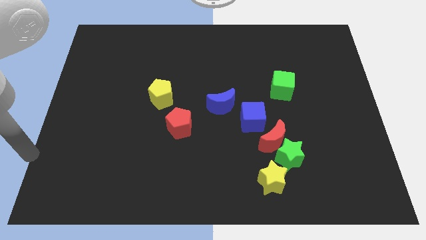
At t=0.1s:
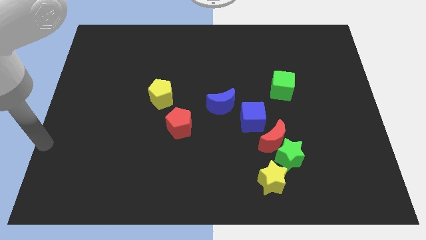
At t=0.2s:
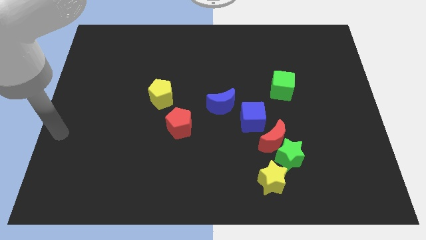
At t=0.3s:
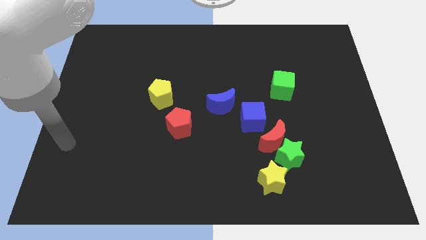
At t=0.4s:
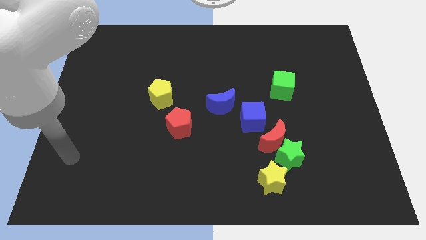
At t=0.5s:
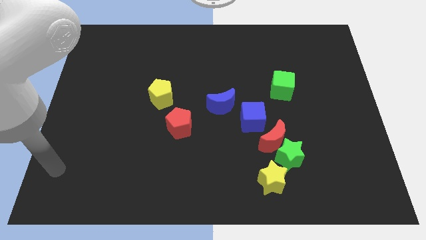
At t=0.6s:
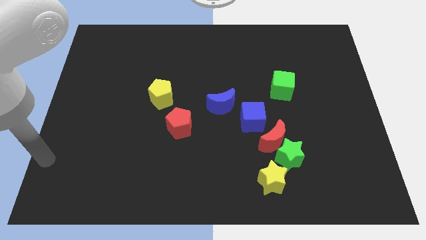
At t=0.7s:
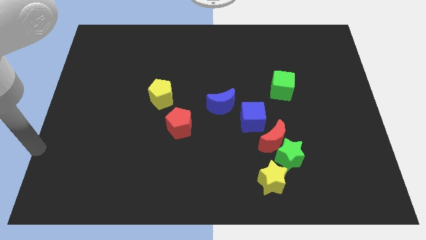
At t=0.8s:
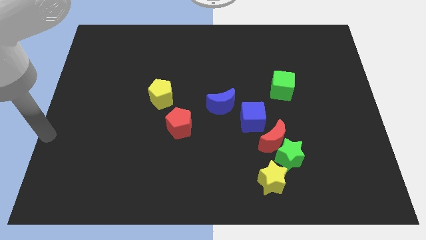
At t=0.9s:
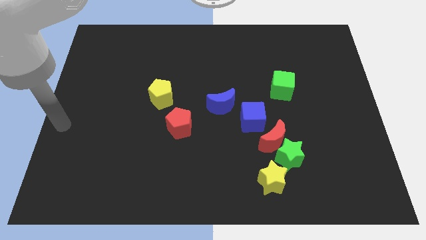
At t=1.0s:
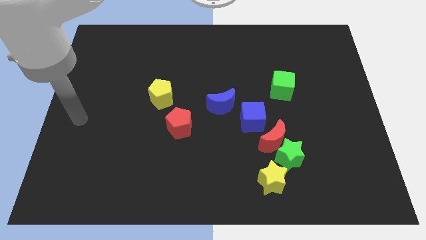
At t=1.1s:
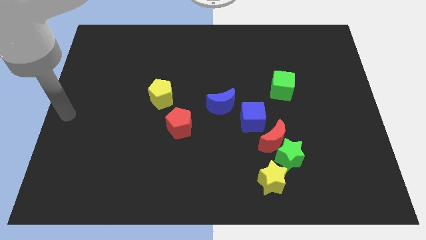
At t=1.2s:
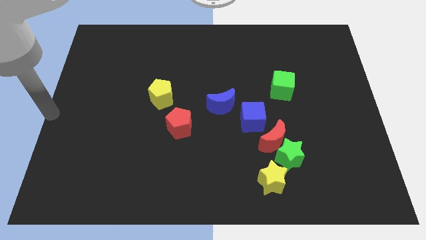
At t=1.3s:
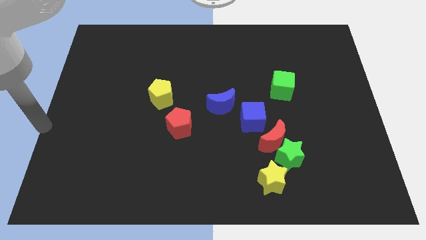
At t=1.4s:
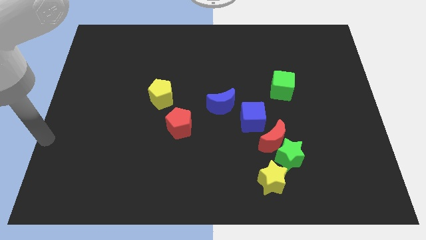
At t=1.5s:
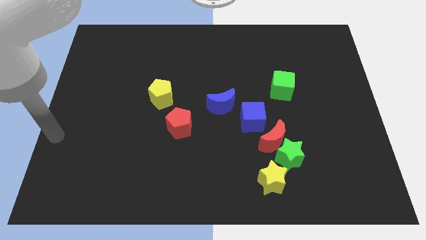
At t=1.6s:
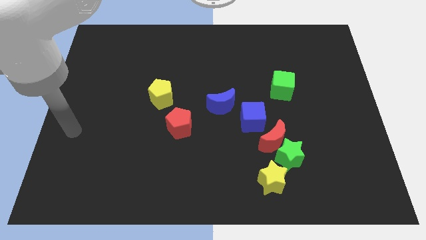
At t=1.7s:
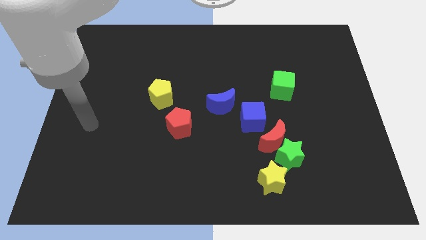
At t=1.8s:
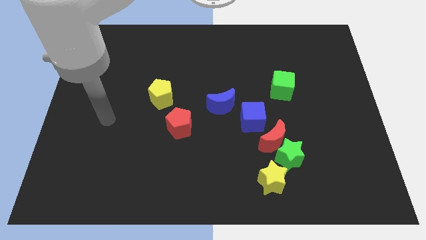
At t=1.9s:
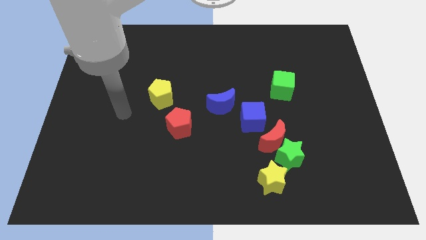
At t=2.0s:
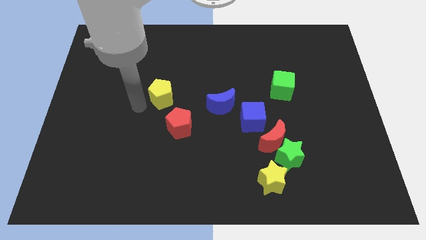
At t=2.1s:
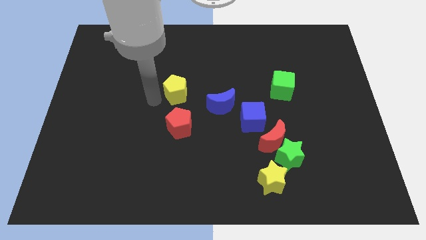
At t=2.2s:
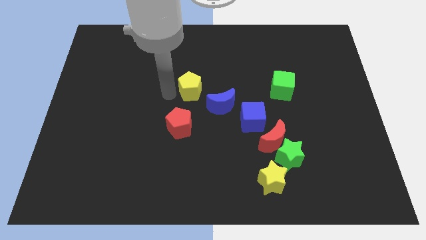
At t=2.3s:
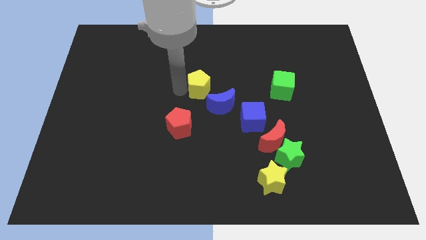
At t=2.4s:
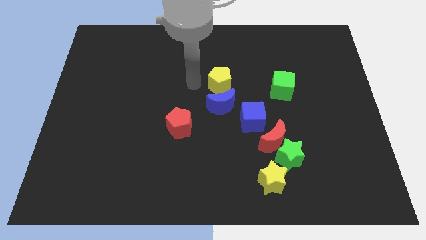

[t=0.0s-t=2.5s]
push the yellow pentagon to the top of the blue crescent

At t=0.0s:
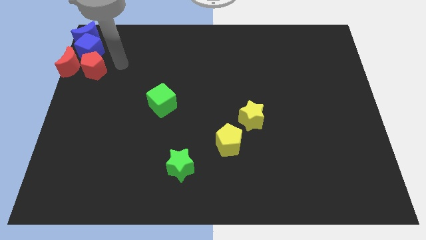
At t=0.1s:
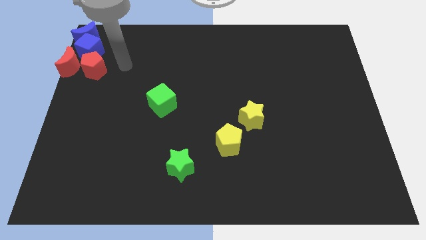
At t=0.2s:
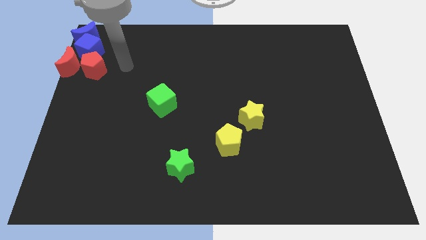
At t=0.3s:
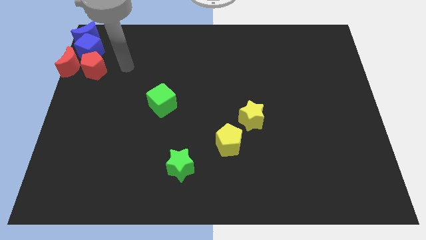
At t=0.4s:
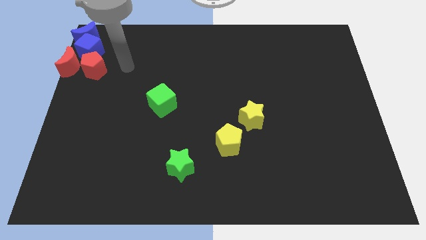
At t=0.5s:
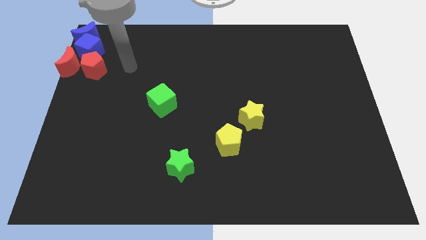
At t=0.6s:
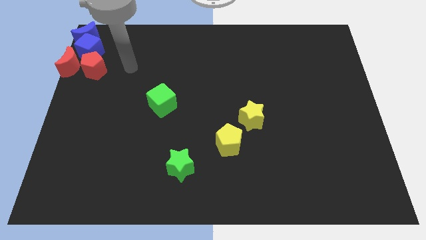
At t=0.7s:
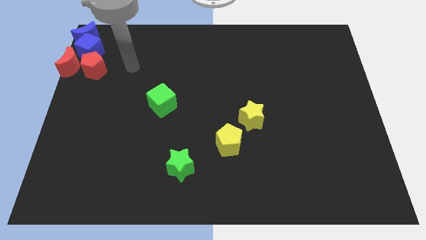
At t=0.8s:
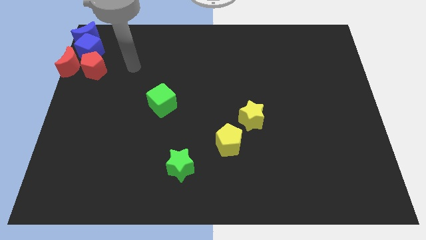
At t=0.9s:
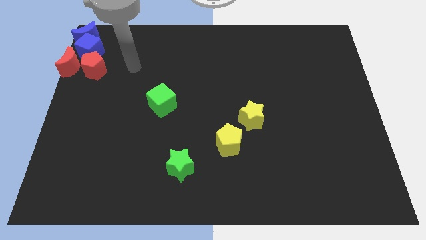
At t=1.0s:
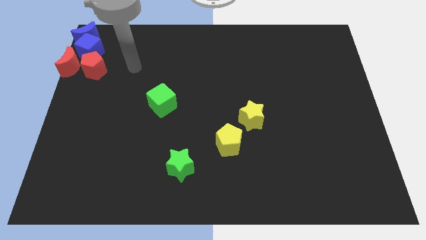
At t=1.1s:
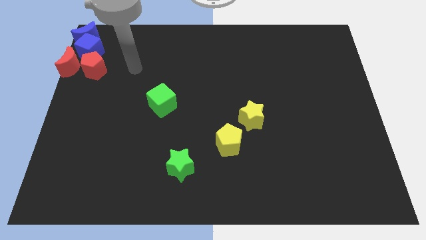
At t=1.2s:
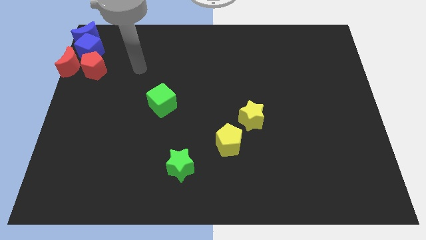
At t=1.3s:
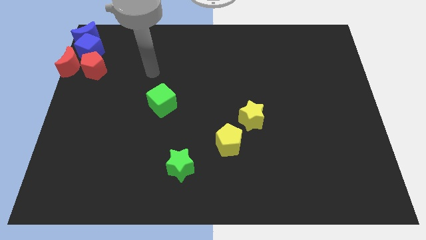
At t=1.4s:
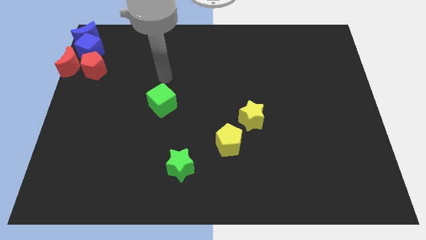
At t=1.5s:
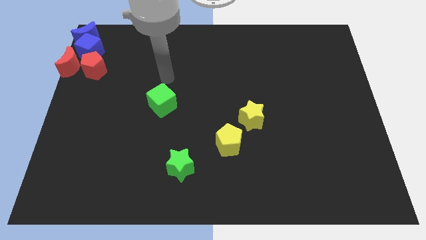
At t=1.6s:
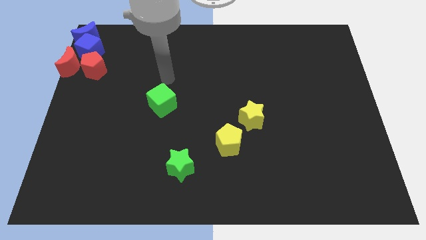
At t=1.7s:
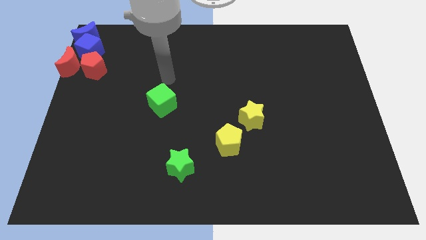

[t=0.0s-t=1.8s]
point your arm at the top of green cube

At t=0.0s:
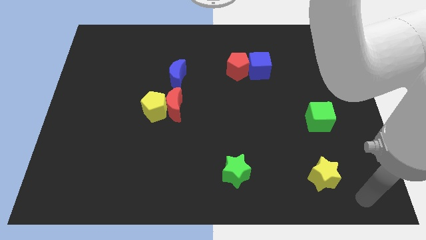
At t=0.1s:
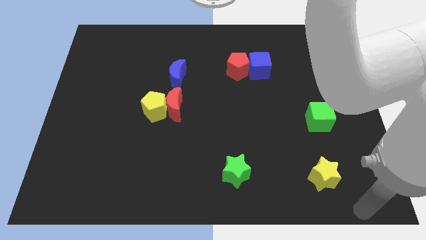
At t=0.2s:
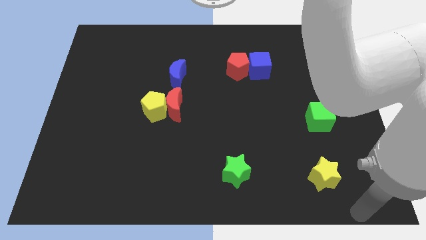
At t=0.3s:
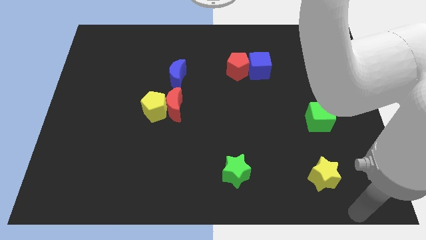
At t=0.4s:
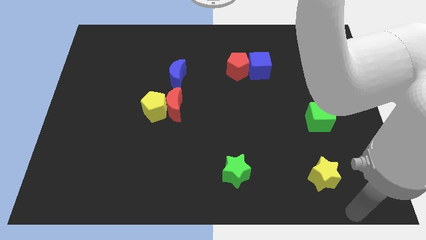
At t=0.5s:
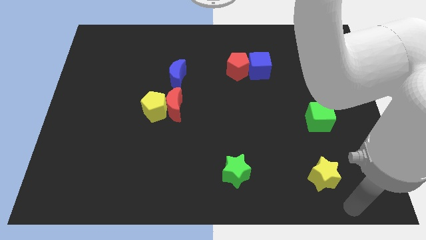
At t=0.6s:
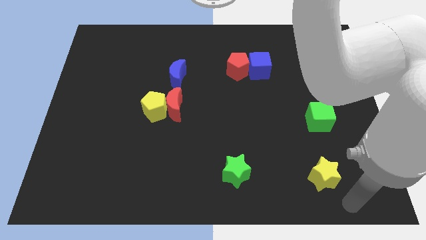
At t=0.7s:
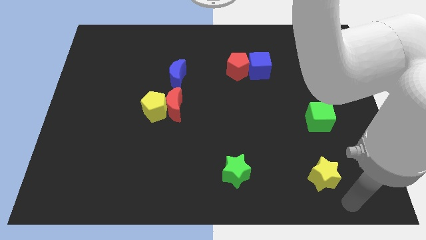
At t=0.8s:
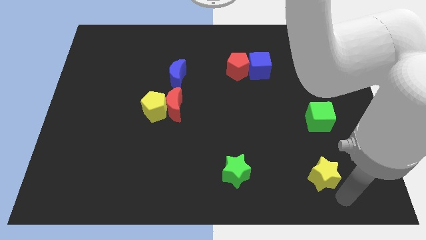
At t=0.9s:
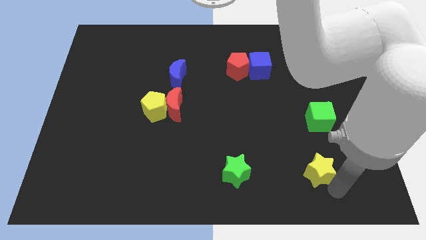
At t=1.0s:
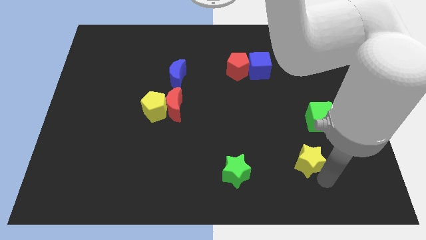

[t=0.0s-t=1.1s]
touch the bottom of yellow star

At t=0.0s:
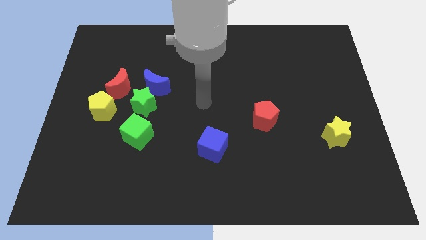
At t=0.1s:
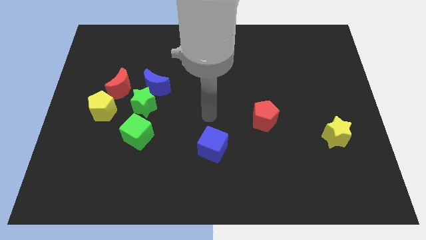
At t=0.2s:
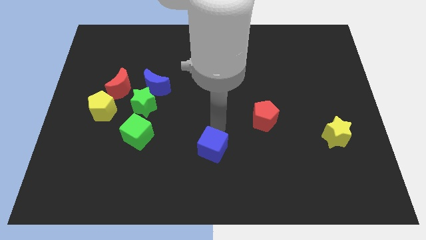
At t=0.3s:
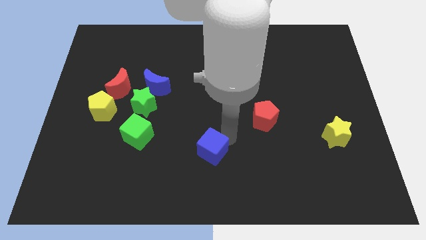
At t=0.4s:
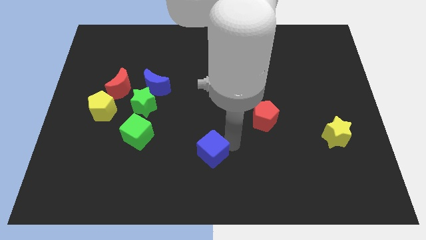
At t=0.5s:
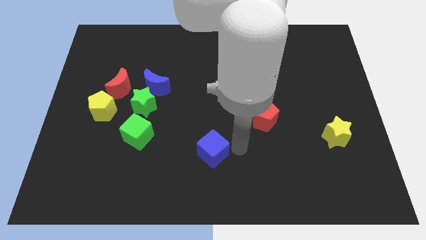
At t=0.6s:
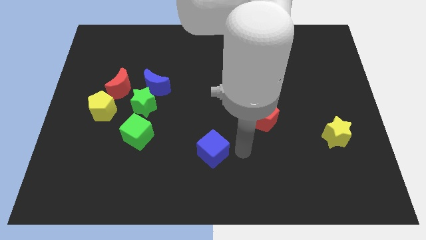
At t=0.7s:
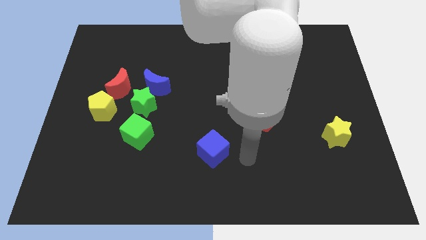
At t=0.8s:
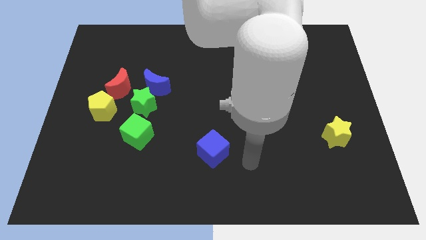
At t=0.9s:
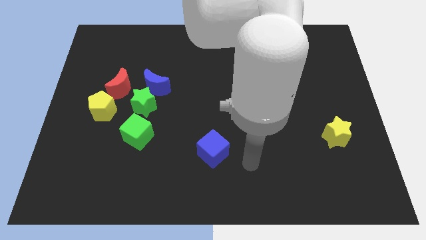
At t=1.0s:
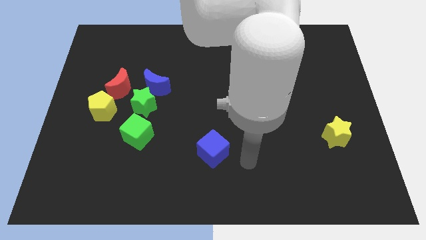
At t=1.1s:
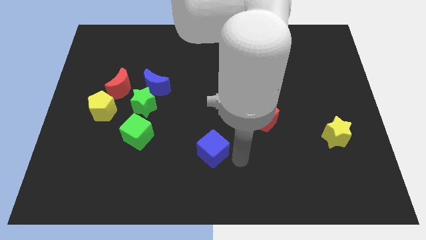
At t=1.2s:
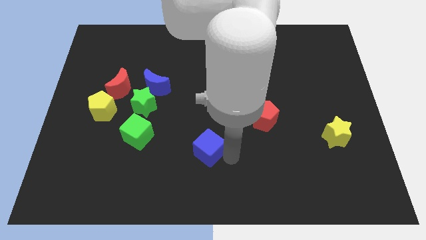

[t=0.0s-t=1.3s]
move your hand to the right of the blue cube

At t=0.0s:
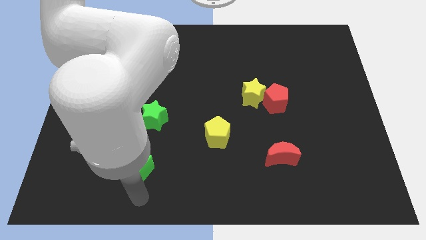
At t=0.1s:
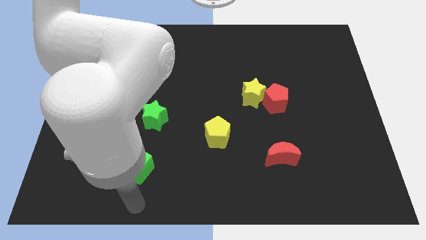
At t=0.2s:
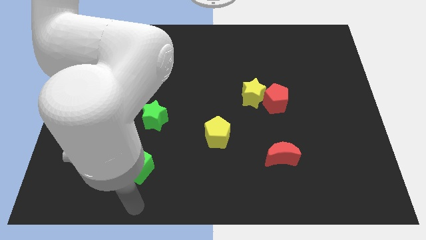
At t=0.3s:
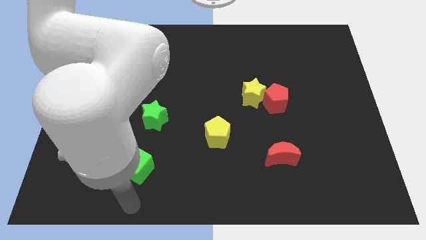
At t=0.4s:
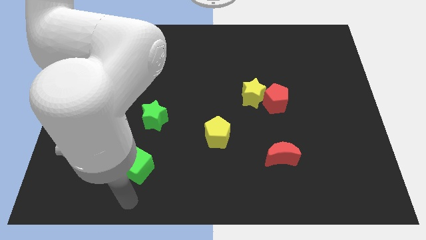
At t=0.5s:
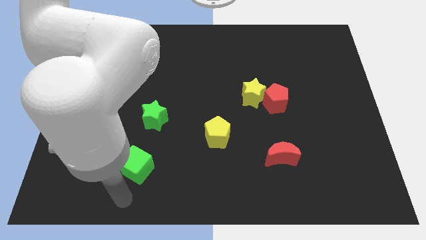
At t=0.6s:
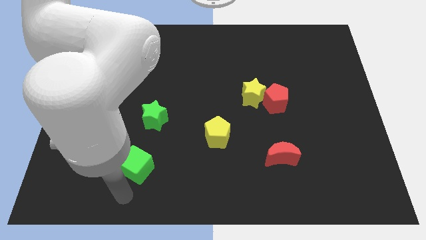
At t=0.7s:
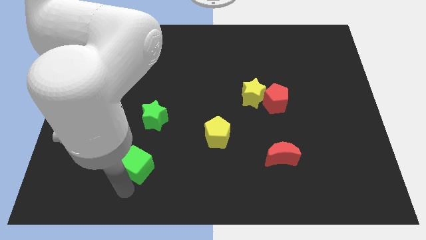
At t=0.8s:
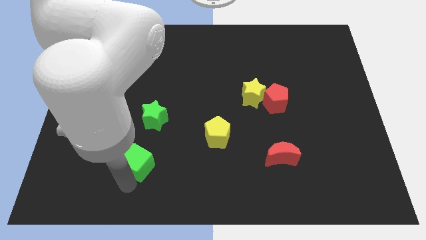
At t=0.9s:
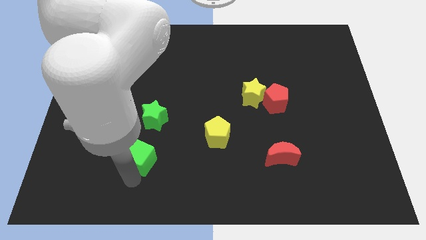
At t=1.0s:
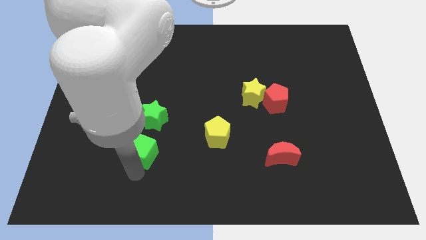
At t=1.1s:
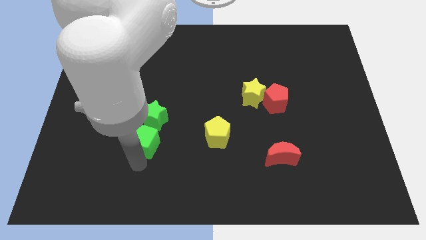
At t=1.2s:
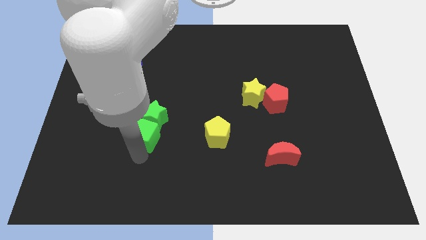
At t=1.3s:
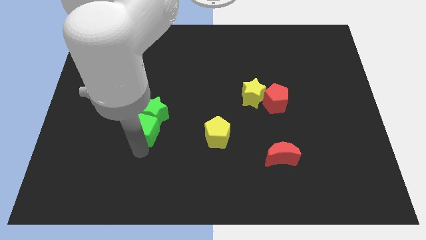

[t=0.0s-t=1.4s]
push the green cube below the green star

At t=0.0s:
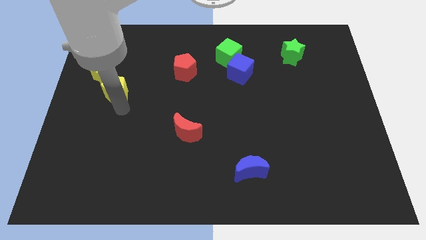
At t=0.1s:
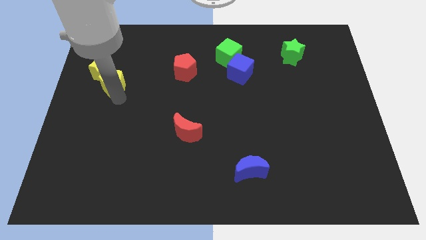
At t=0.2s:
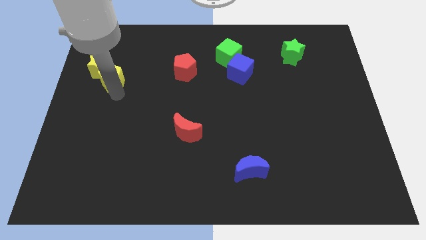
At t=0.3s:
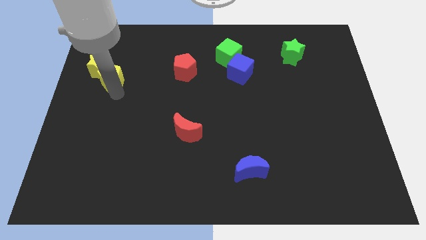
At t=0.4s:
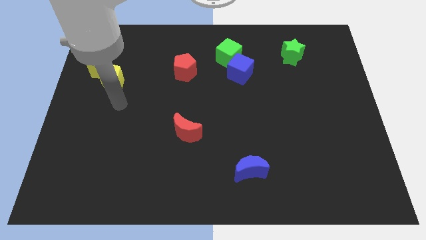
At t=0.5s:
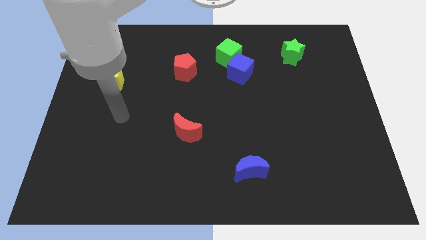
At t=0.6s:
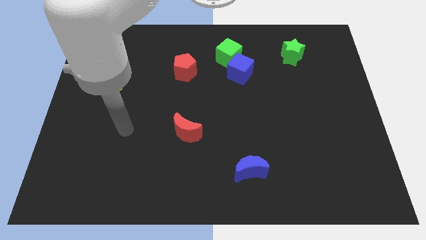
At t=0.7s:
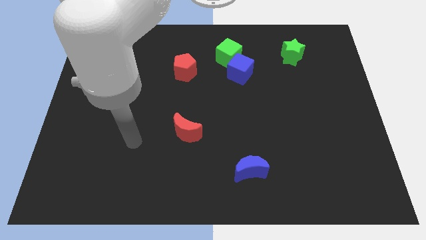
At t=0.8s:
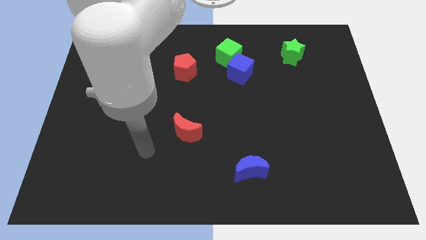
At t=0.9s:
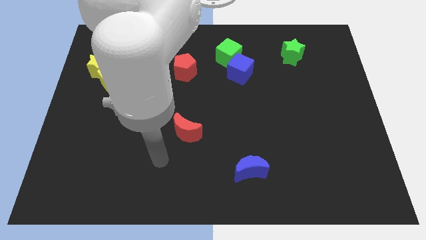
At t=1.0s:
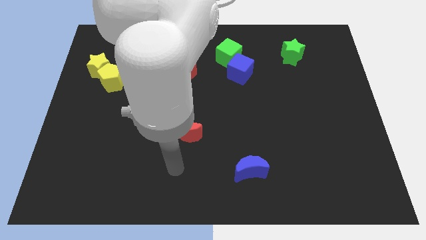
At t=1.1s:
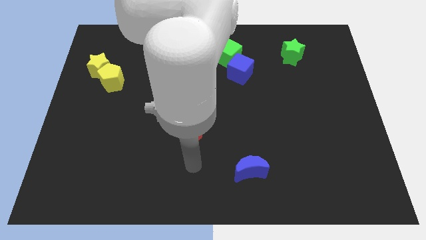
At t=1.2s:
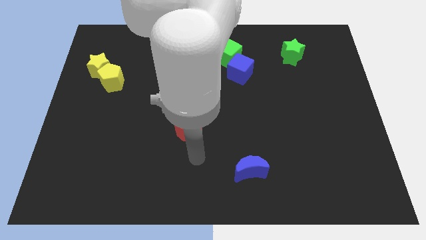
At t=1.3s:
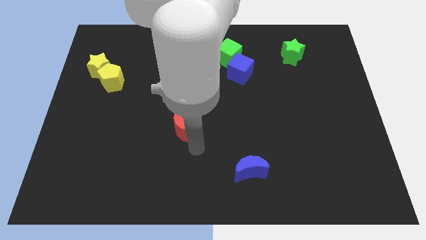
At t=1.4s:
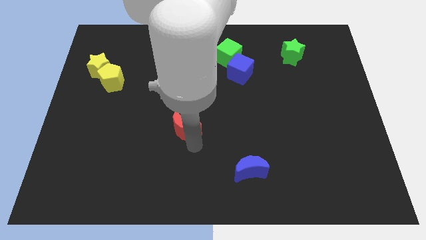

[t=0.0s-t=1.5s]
push the yellow pentagon below the yellow star
